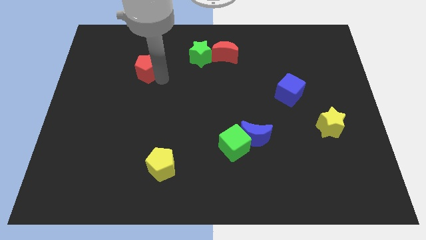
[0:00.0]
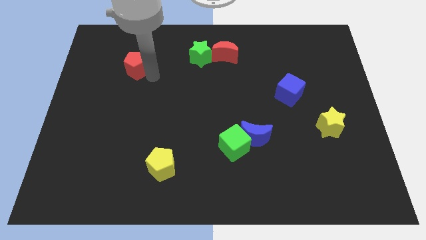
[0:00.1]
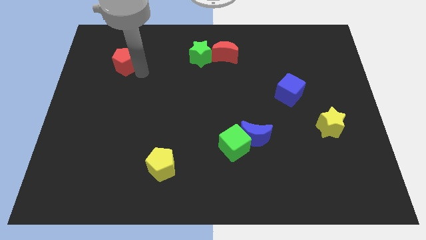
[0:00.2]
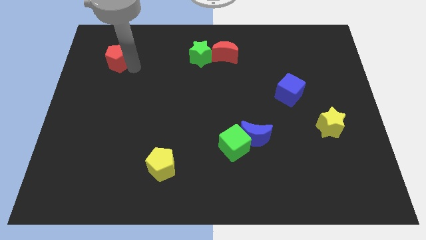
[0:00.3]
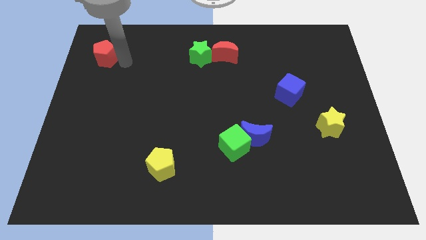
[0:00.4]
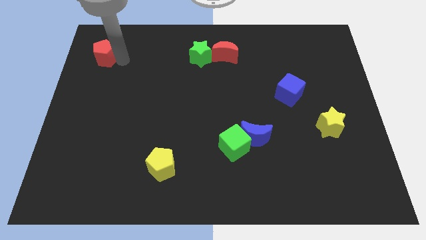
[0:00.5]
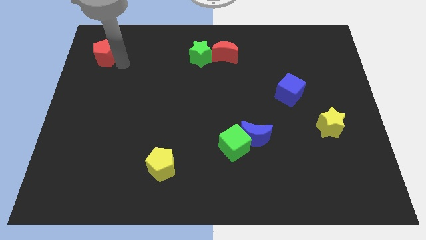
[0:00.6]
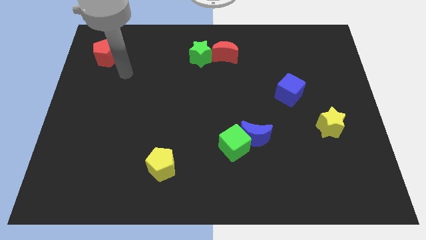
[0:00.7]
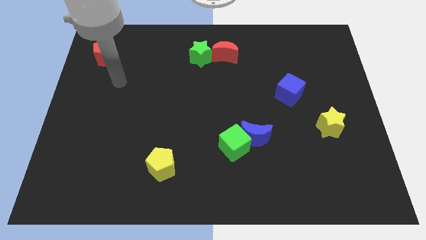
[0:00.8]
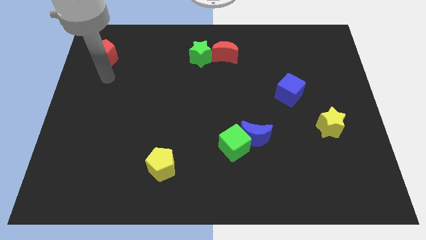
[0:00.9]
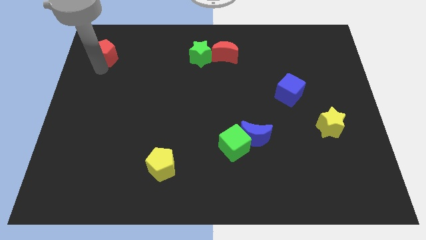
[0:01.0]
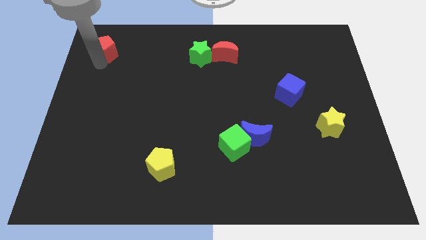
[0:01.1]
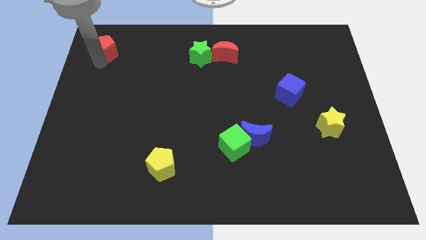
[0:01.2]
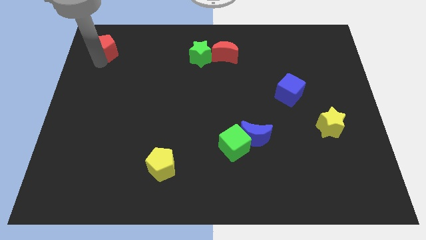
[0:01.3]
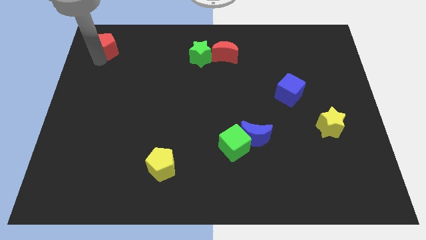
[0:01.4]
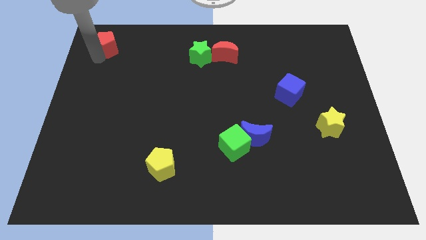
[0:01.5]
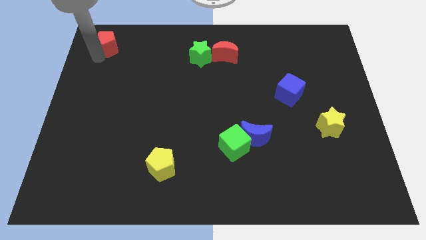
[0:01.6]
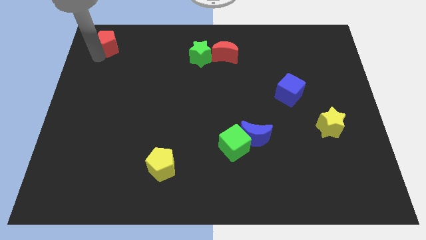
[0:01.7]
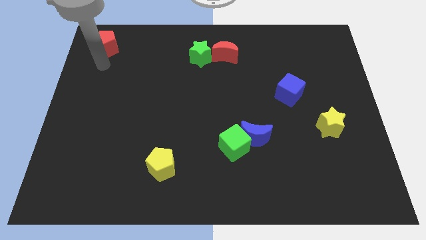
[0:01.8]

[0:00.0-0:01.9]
push the red pentagon towards the top left of the board

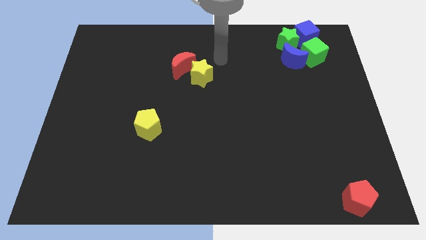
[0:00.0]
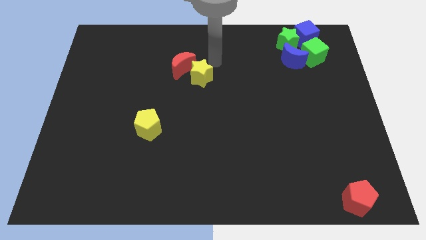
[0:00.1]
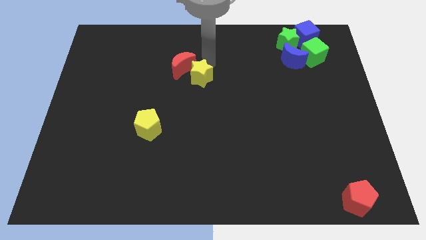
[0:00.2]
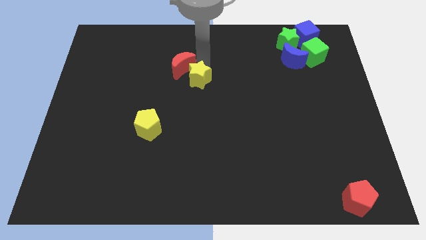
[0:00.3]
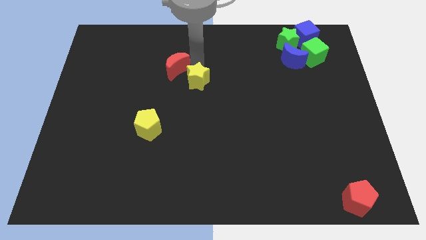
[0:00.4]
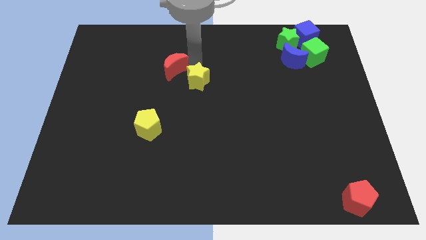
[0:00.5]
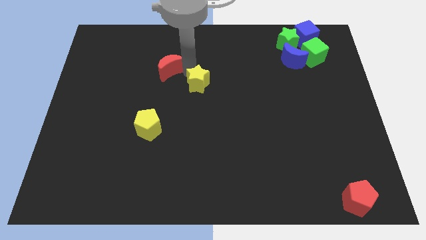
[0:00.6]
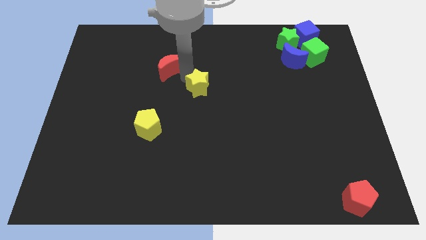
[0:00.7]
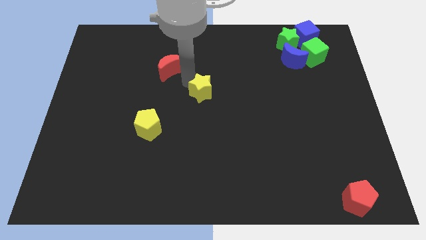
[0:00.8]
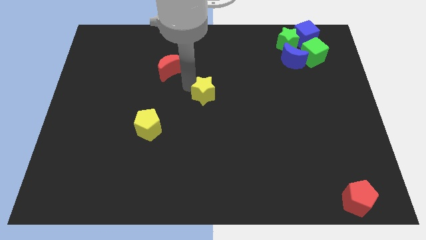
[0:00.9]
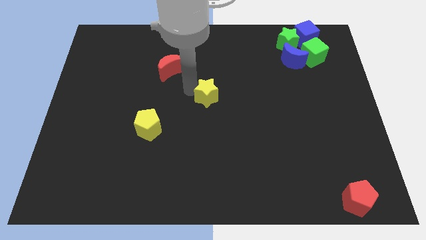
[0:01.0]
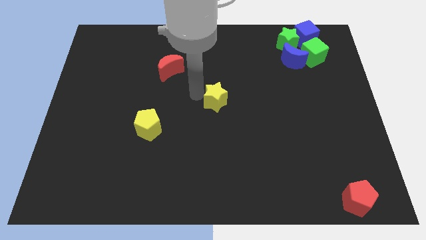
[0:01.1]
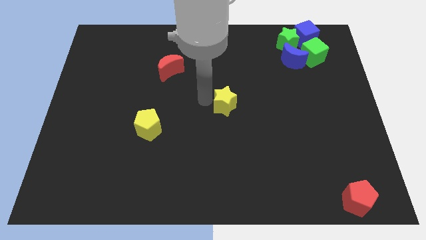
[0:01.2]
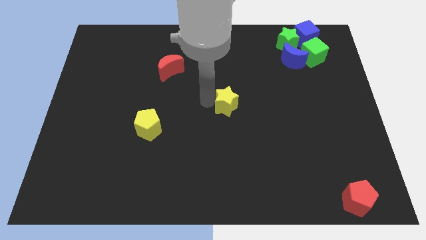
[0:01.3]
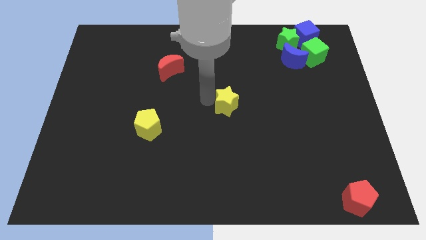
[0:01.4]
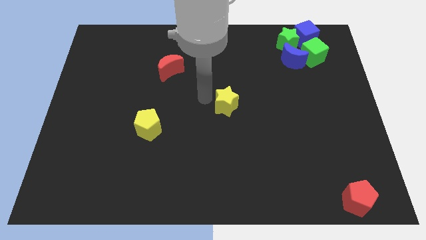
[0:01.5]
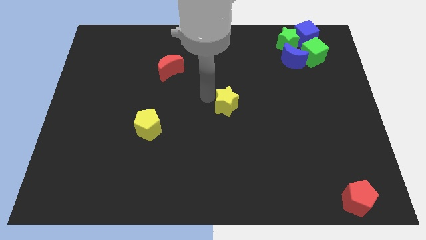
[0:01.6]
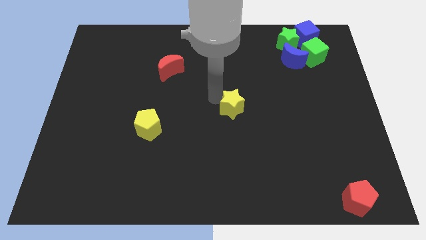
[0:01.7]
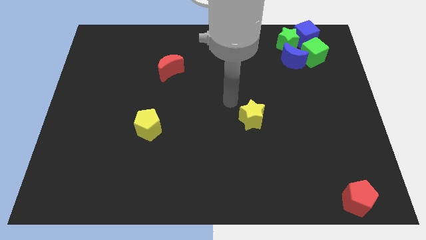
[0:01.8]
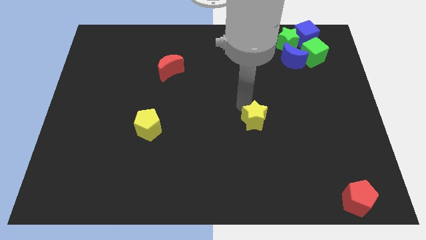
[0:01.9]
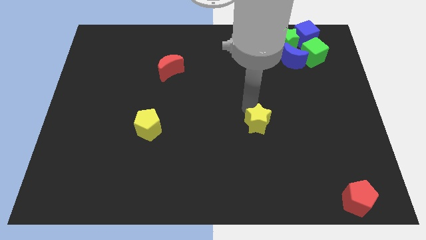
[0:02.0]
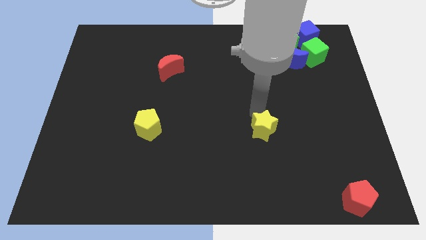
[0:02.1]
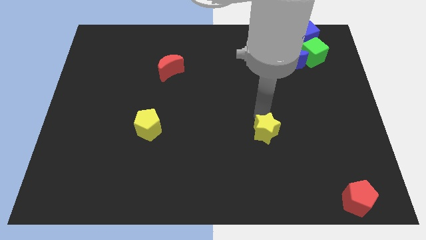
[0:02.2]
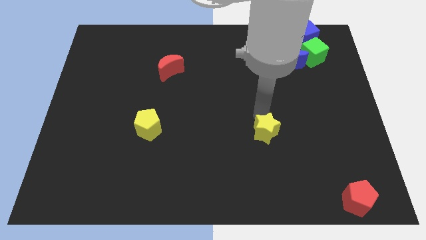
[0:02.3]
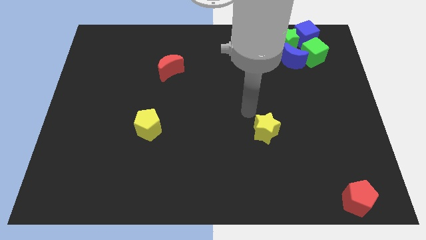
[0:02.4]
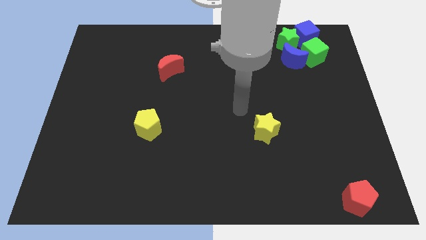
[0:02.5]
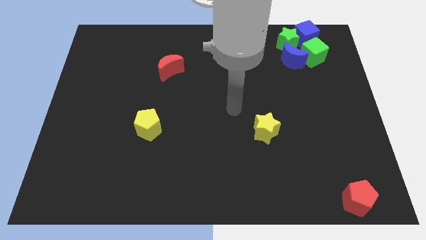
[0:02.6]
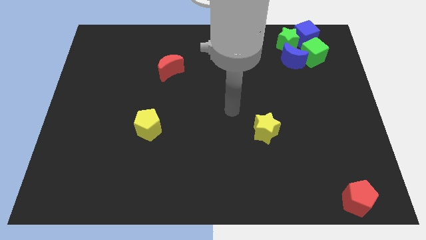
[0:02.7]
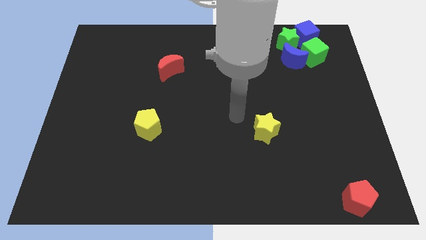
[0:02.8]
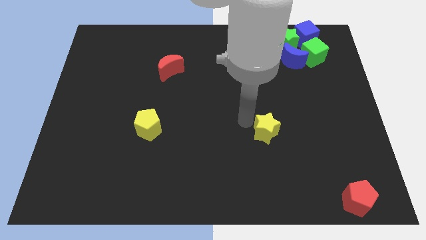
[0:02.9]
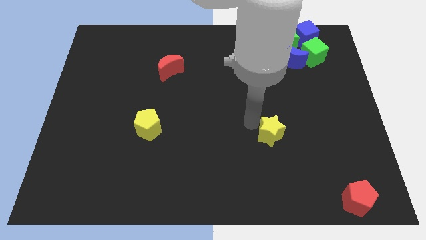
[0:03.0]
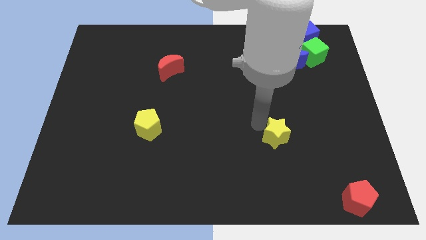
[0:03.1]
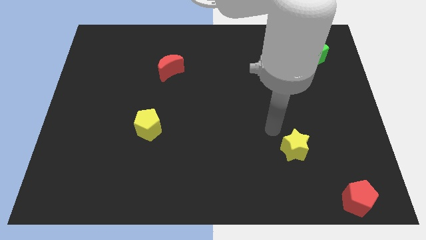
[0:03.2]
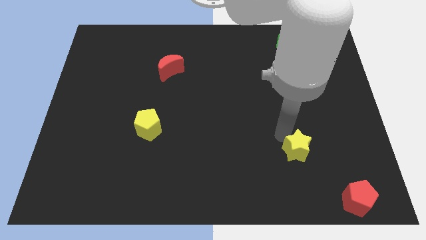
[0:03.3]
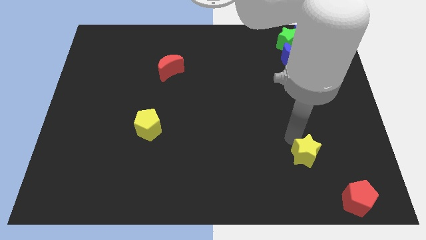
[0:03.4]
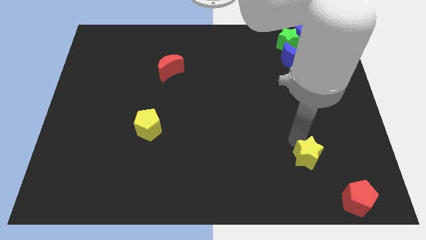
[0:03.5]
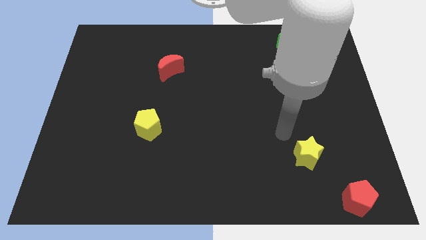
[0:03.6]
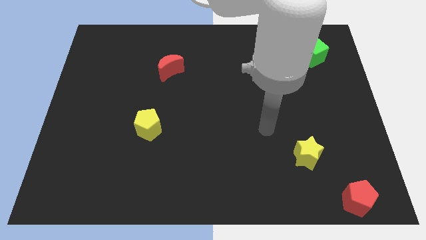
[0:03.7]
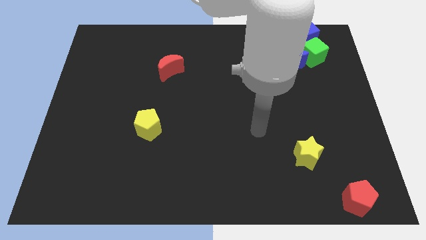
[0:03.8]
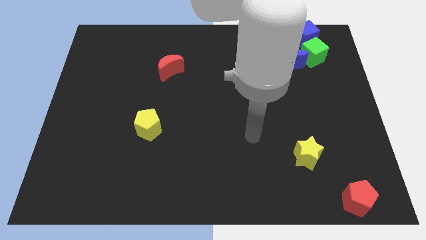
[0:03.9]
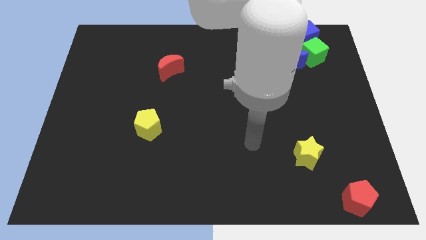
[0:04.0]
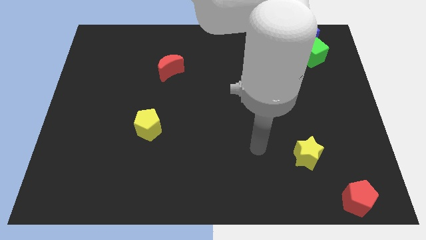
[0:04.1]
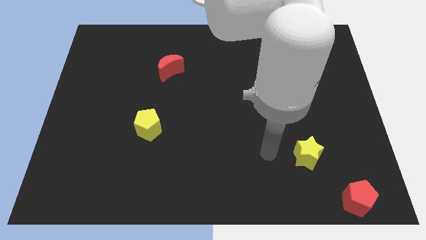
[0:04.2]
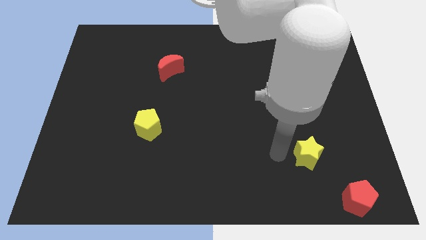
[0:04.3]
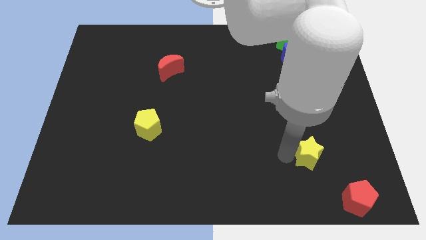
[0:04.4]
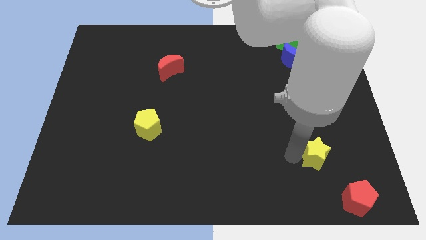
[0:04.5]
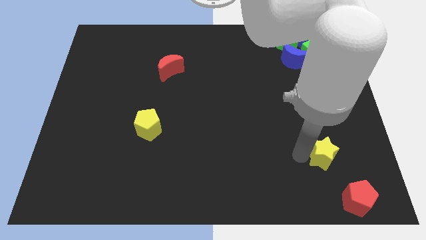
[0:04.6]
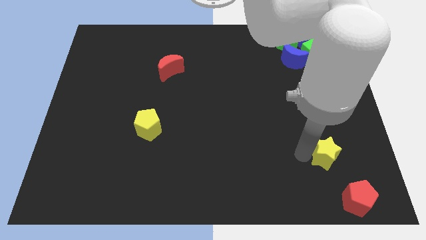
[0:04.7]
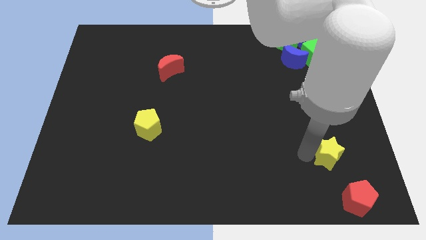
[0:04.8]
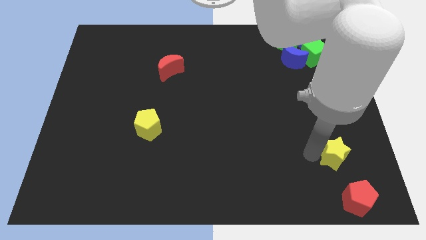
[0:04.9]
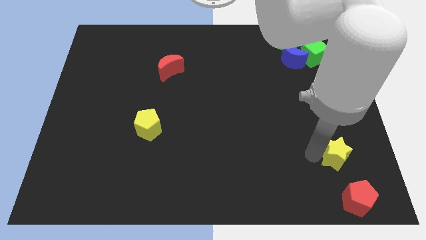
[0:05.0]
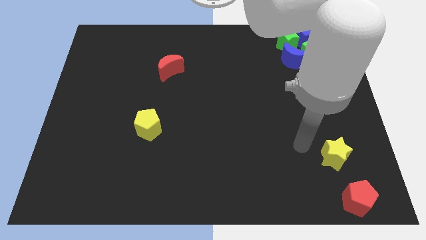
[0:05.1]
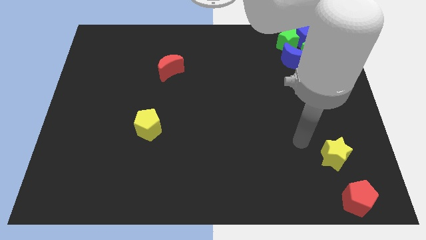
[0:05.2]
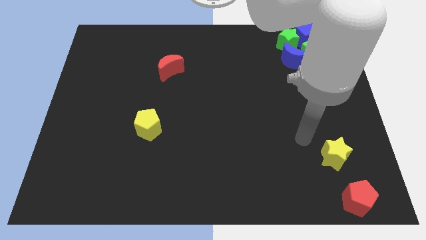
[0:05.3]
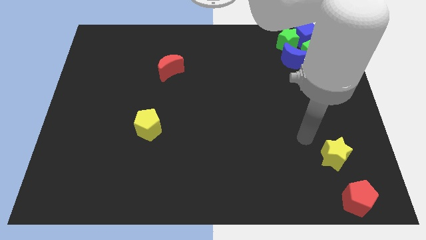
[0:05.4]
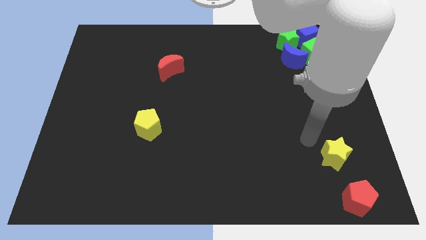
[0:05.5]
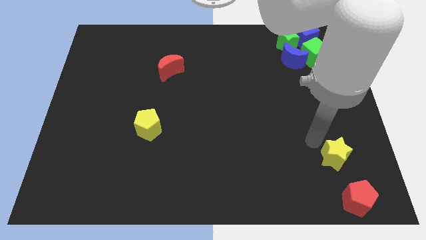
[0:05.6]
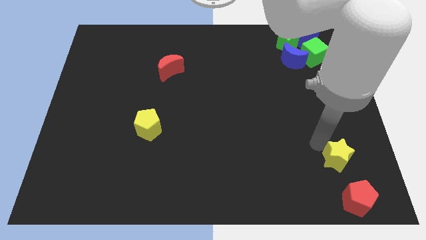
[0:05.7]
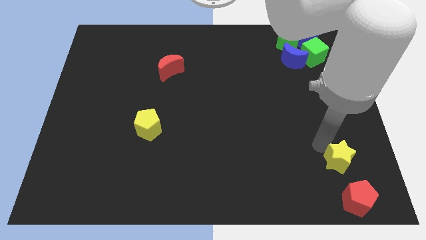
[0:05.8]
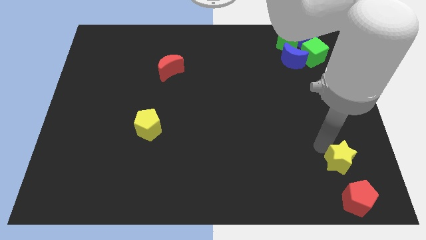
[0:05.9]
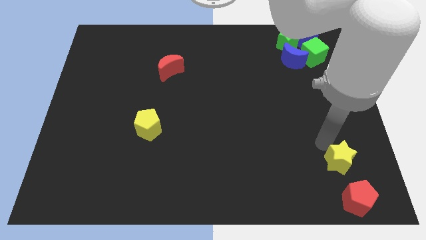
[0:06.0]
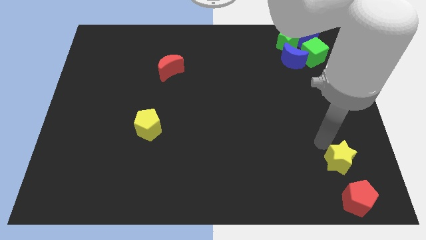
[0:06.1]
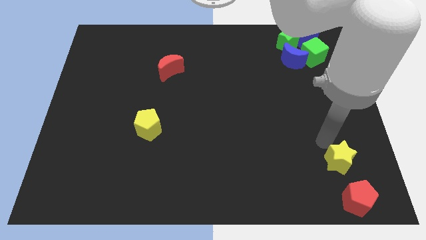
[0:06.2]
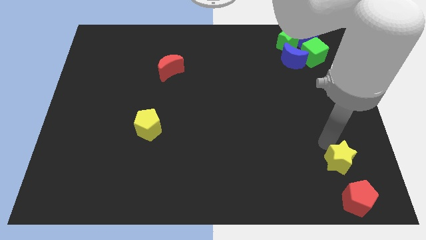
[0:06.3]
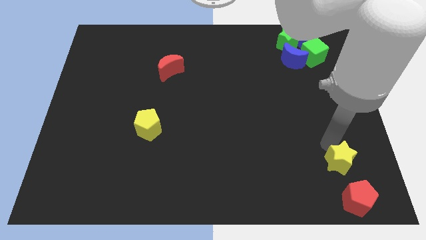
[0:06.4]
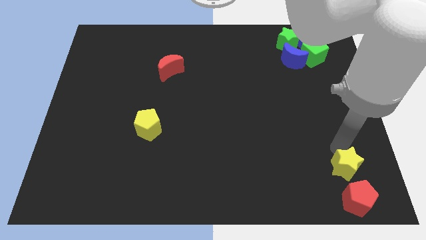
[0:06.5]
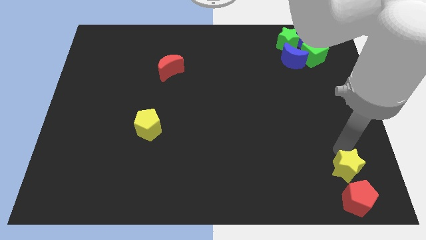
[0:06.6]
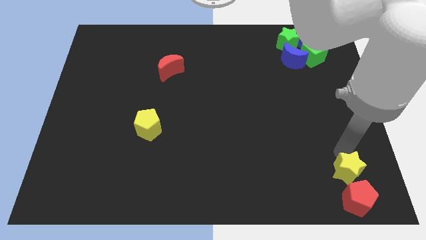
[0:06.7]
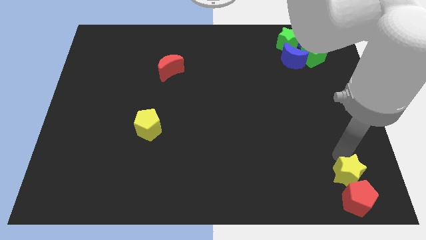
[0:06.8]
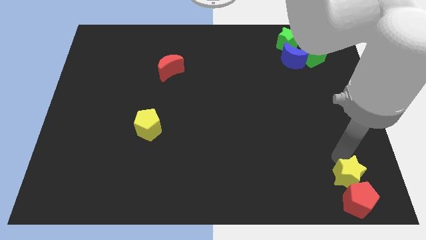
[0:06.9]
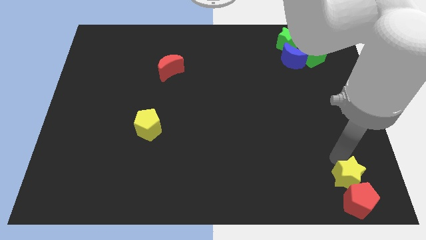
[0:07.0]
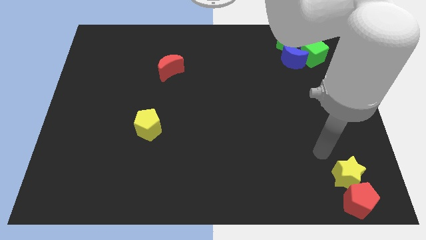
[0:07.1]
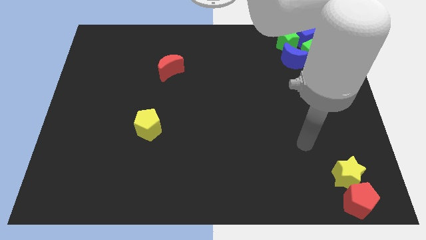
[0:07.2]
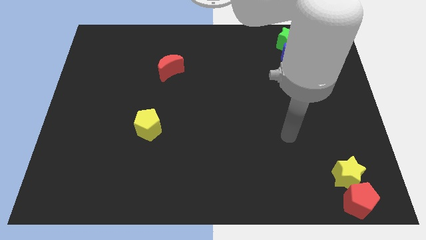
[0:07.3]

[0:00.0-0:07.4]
push the yellow star into the red pentagon
